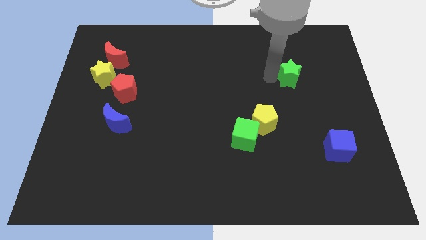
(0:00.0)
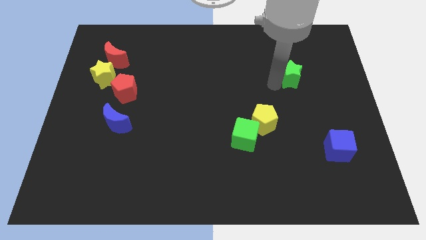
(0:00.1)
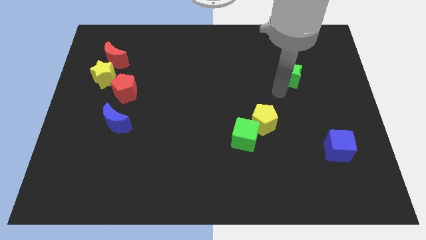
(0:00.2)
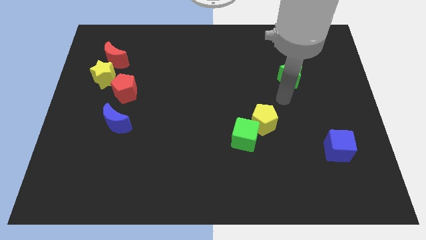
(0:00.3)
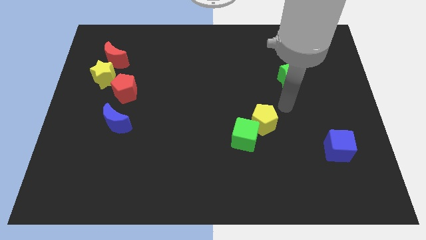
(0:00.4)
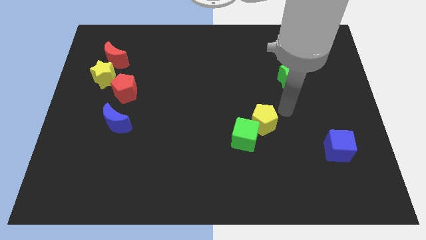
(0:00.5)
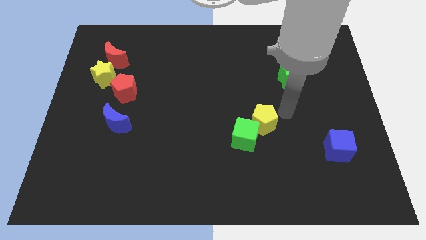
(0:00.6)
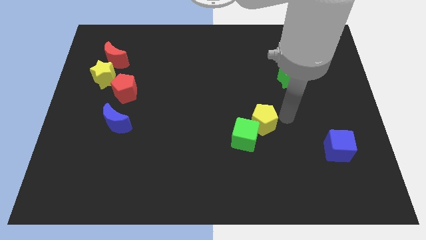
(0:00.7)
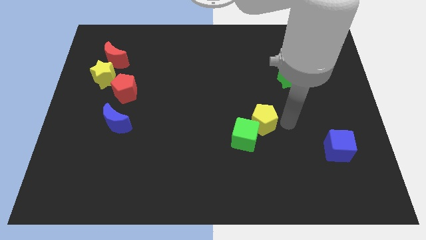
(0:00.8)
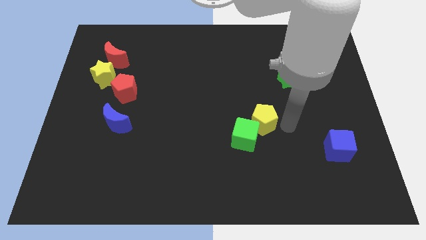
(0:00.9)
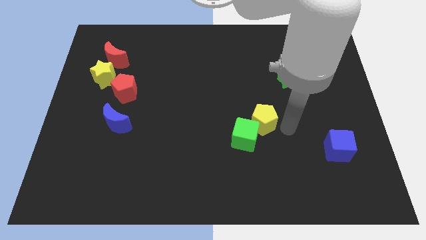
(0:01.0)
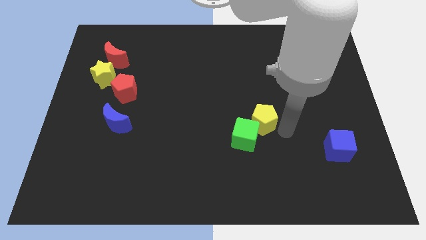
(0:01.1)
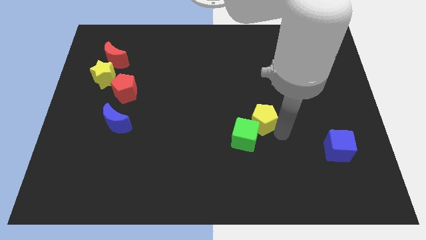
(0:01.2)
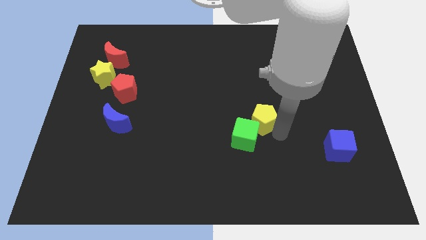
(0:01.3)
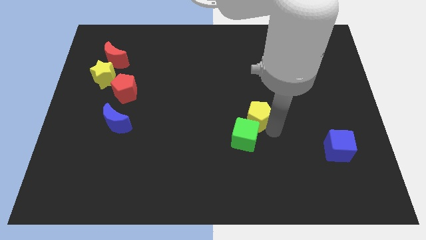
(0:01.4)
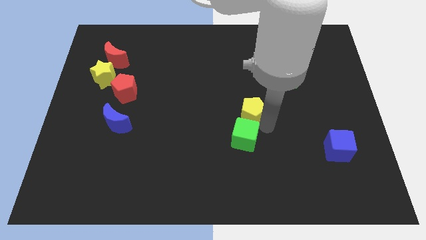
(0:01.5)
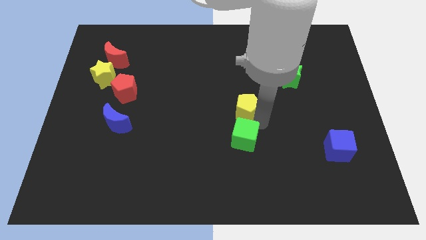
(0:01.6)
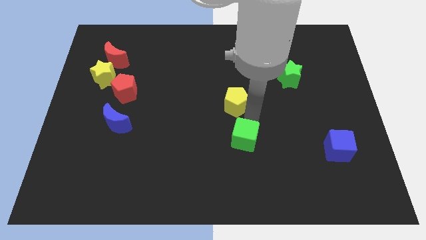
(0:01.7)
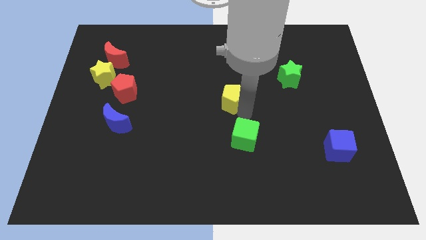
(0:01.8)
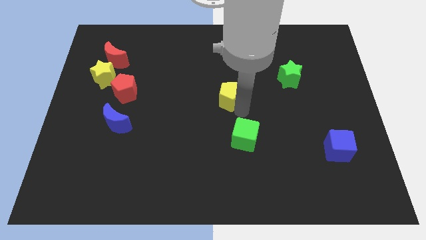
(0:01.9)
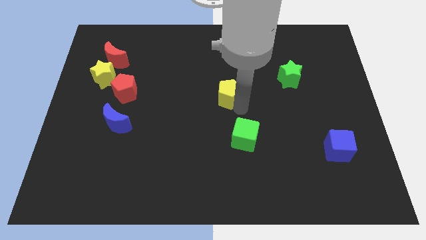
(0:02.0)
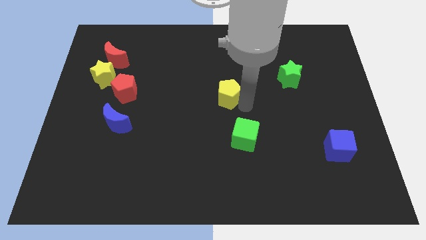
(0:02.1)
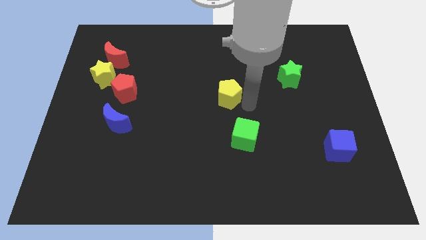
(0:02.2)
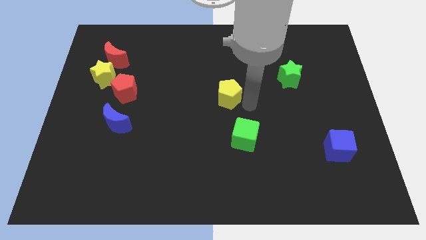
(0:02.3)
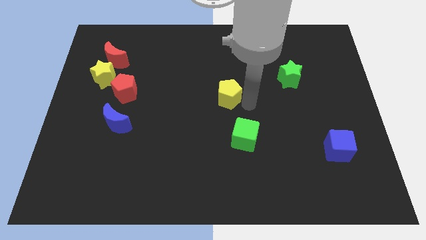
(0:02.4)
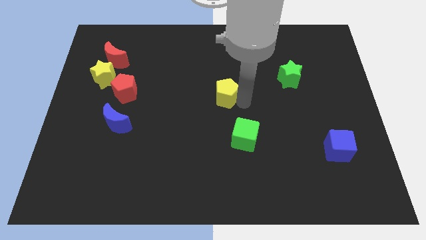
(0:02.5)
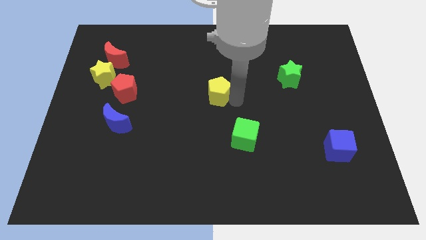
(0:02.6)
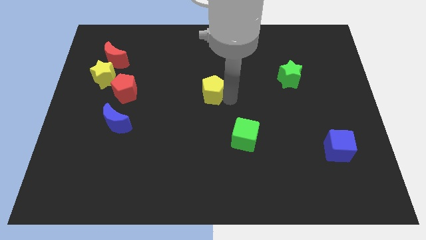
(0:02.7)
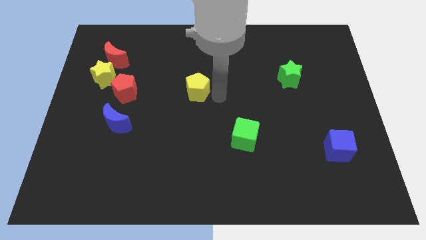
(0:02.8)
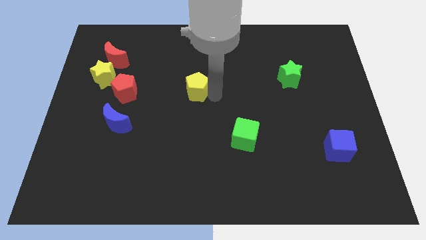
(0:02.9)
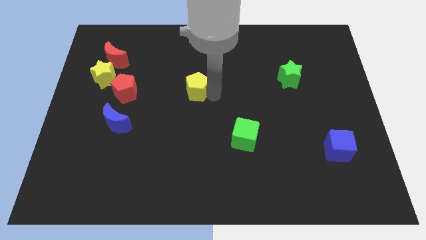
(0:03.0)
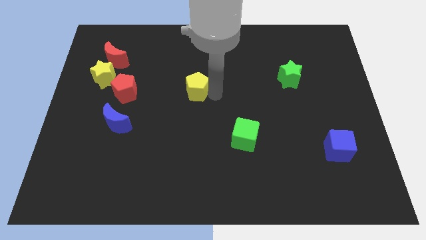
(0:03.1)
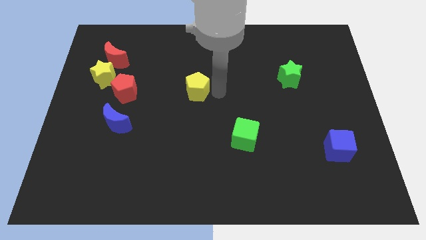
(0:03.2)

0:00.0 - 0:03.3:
place the yellow pentagon to the right of the red pentagon

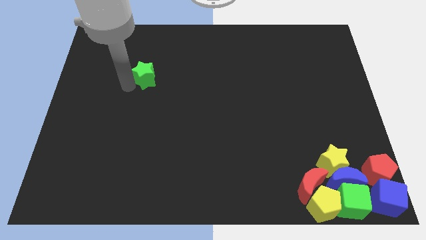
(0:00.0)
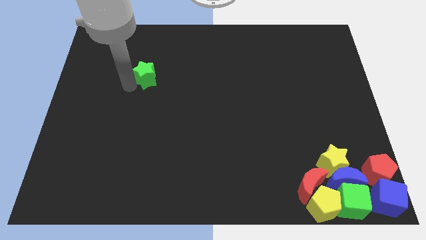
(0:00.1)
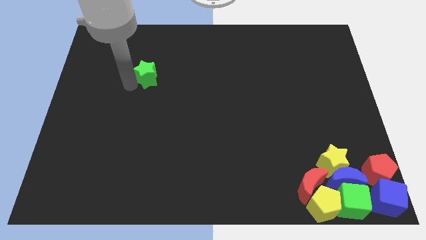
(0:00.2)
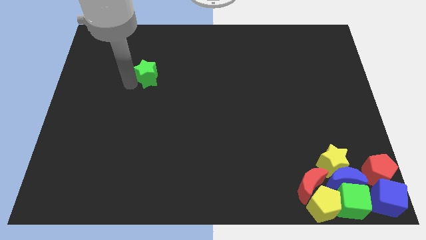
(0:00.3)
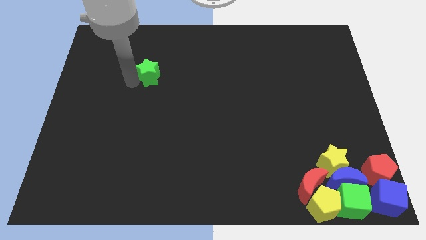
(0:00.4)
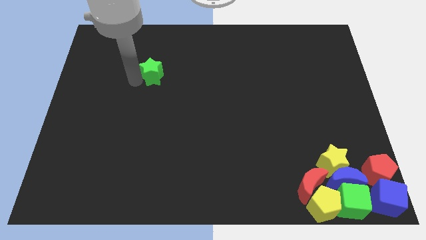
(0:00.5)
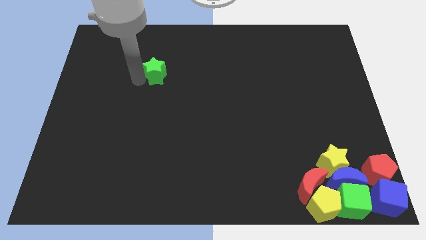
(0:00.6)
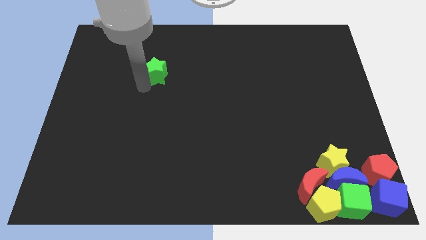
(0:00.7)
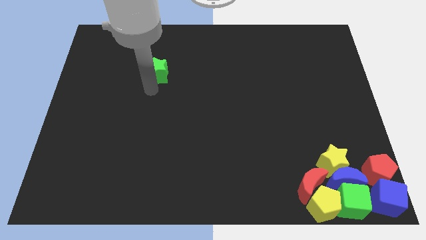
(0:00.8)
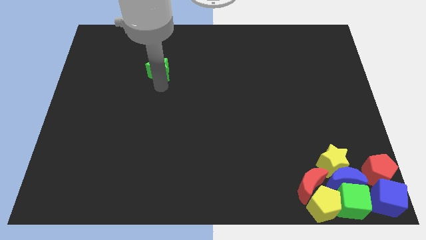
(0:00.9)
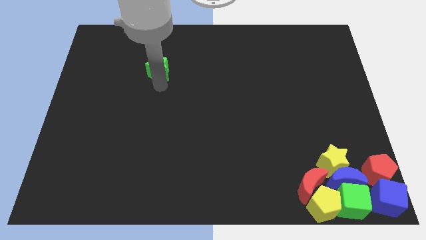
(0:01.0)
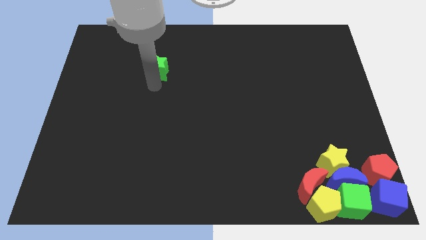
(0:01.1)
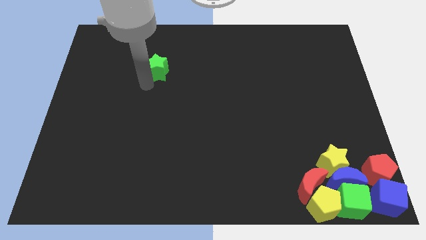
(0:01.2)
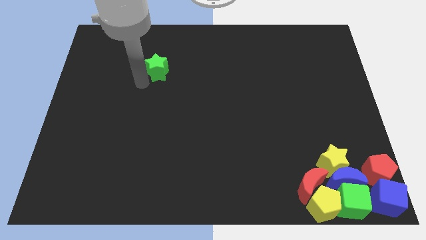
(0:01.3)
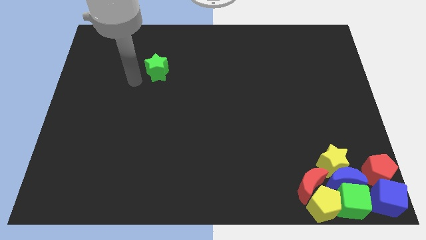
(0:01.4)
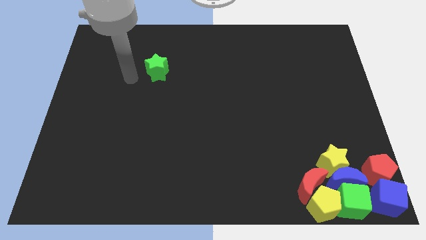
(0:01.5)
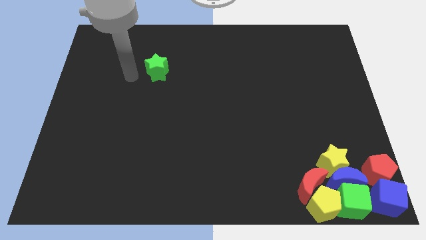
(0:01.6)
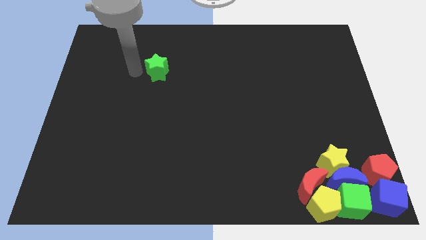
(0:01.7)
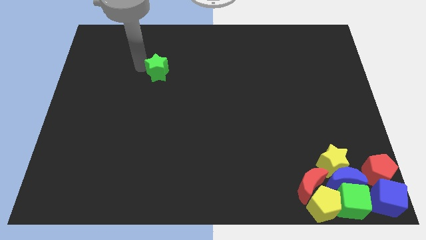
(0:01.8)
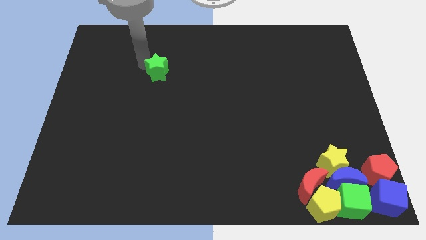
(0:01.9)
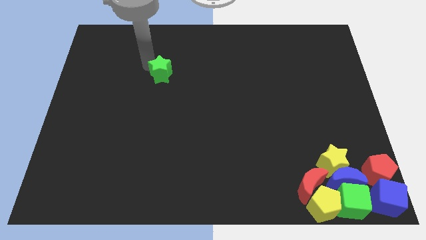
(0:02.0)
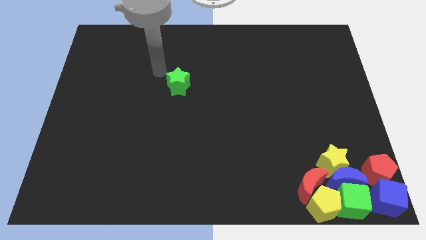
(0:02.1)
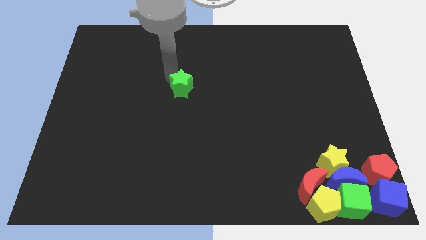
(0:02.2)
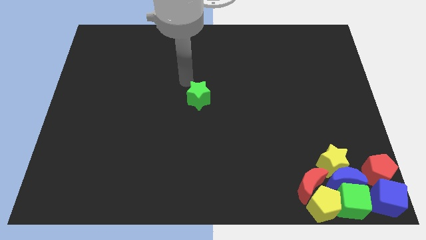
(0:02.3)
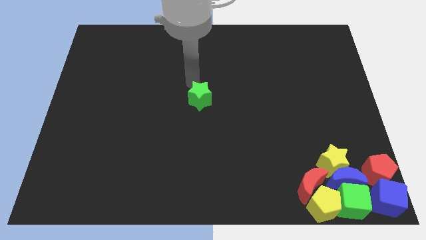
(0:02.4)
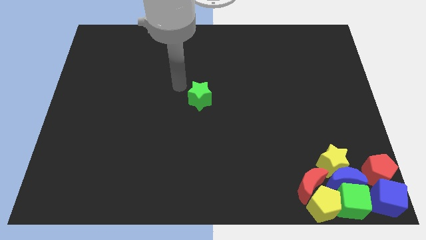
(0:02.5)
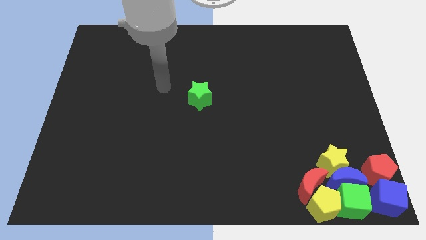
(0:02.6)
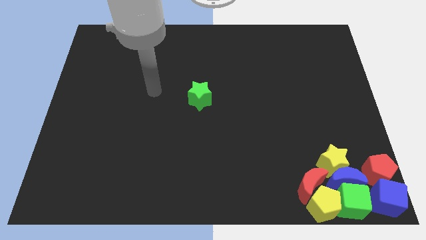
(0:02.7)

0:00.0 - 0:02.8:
place the green star at the center of the board

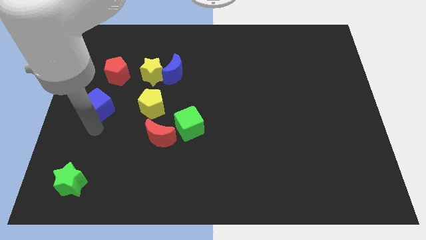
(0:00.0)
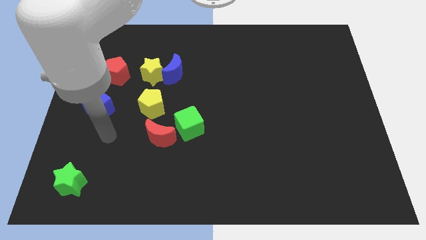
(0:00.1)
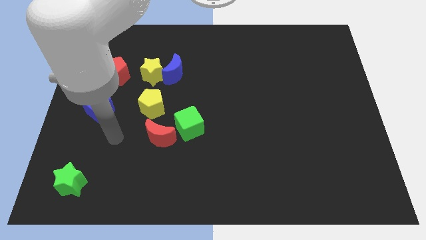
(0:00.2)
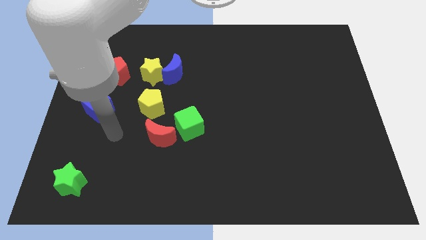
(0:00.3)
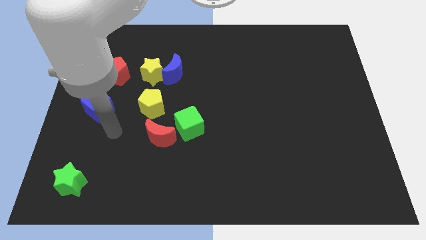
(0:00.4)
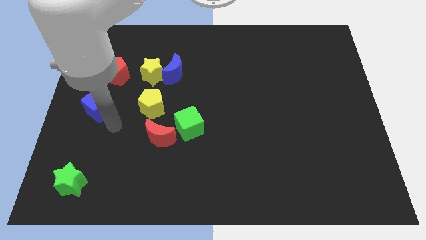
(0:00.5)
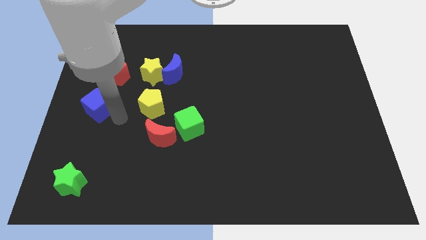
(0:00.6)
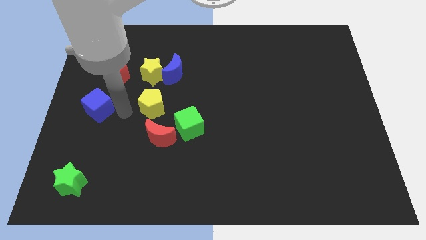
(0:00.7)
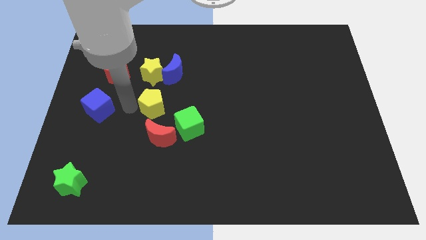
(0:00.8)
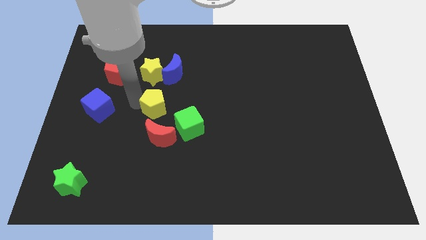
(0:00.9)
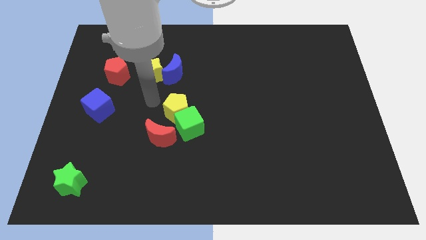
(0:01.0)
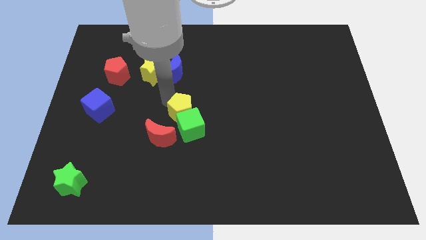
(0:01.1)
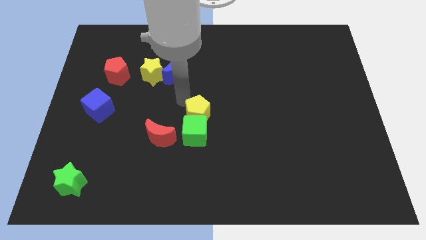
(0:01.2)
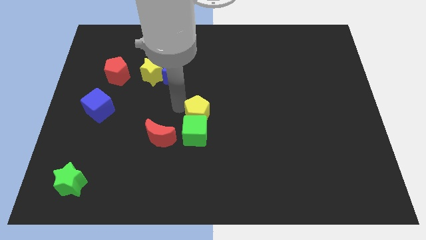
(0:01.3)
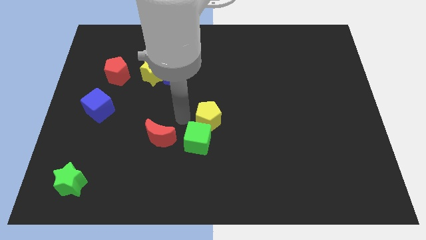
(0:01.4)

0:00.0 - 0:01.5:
move the yellow pentagon into the green cube

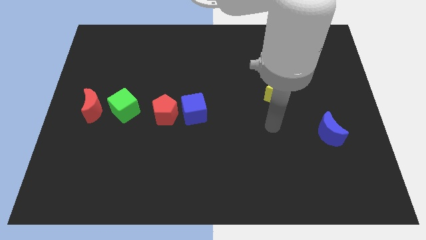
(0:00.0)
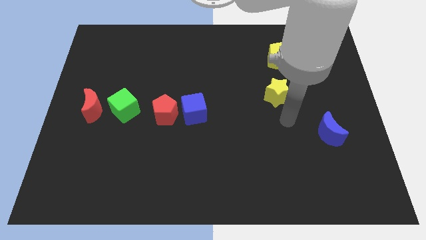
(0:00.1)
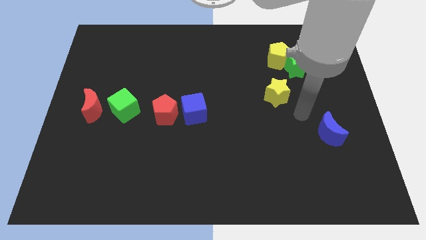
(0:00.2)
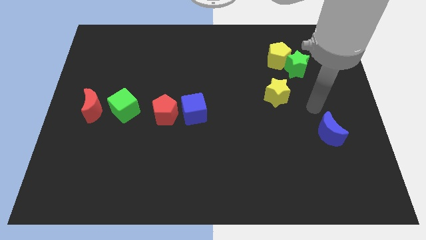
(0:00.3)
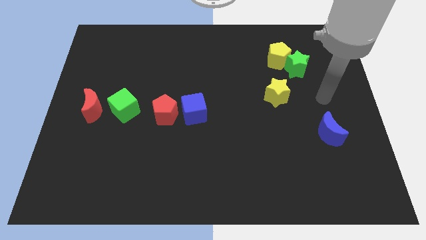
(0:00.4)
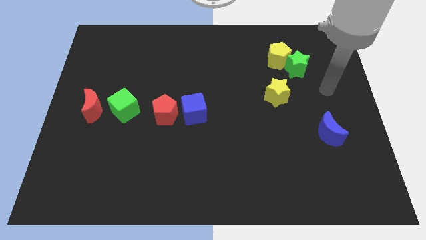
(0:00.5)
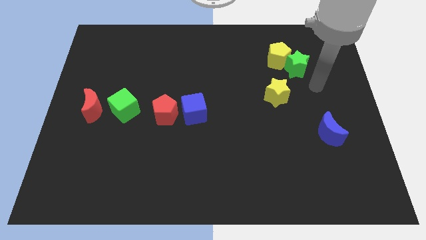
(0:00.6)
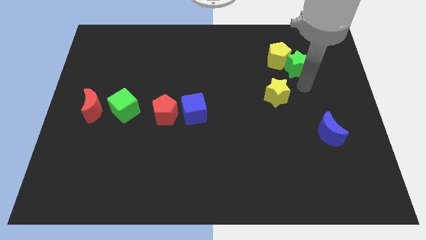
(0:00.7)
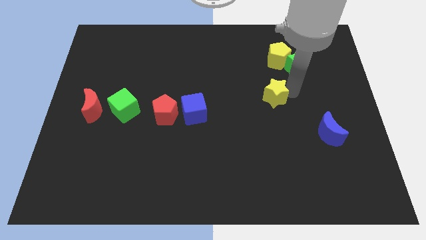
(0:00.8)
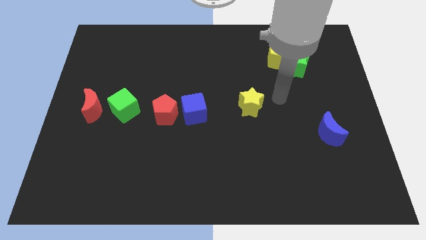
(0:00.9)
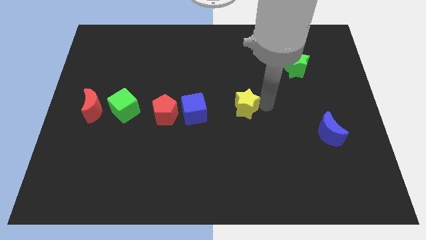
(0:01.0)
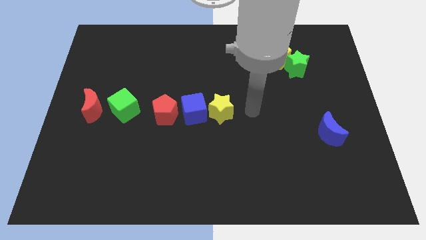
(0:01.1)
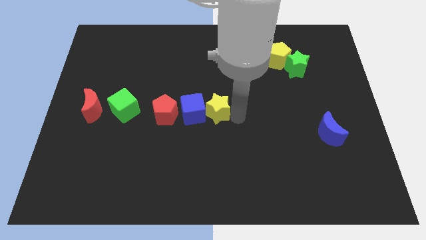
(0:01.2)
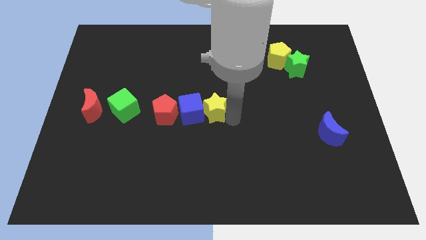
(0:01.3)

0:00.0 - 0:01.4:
push the yellow star into the blue cube

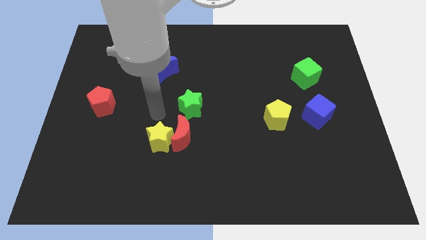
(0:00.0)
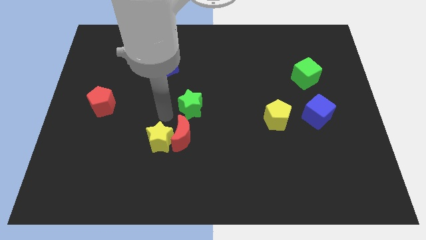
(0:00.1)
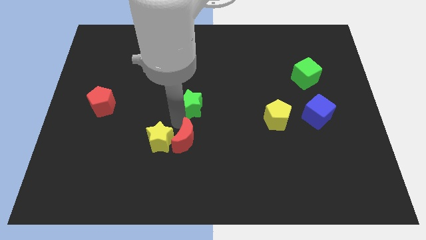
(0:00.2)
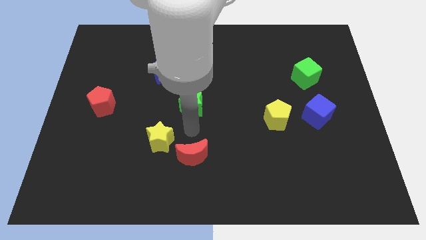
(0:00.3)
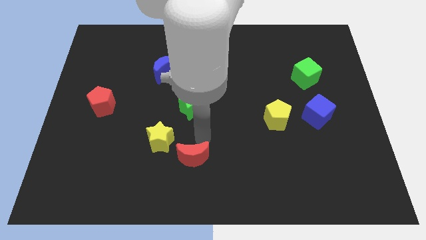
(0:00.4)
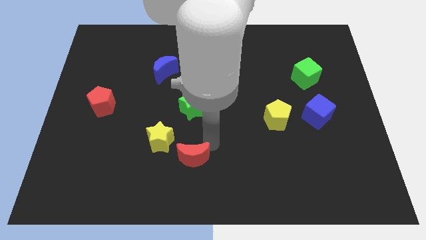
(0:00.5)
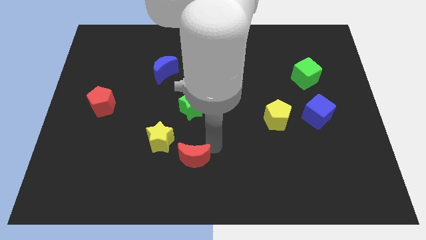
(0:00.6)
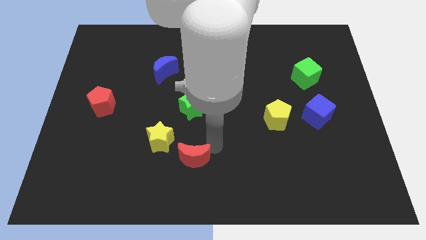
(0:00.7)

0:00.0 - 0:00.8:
separate the red crescent from the yellow star
